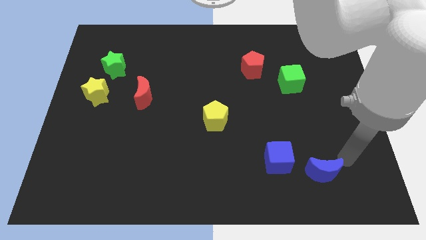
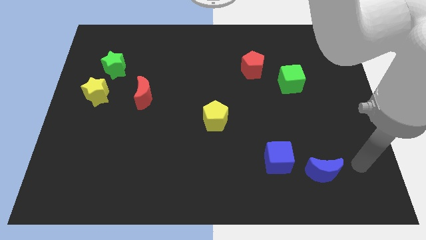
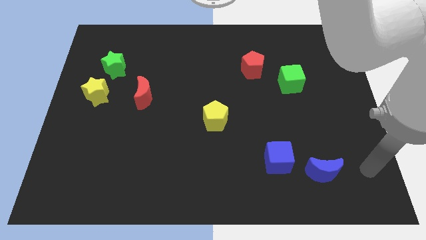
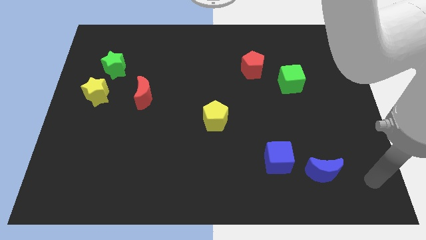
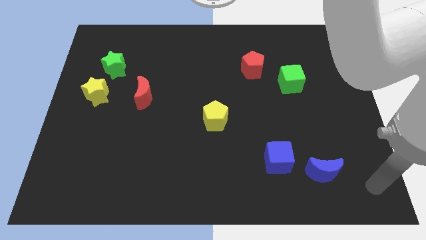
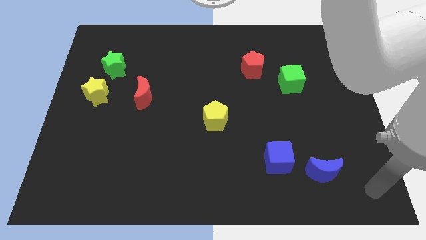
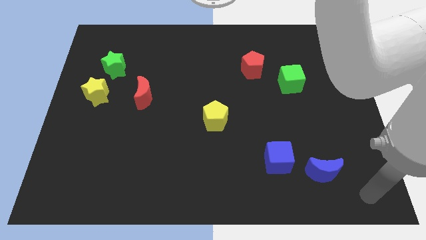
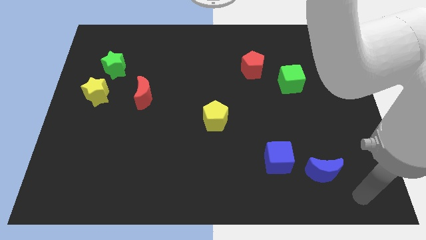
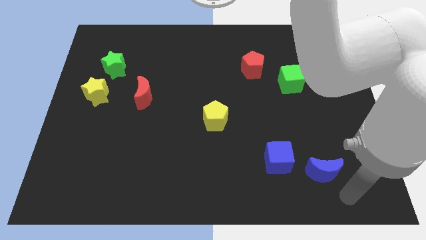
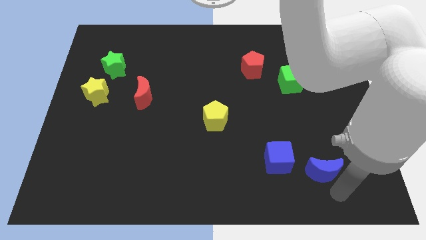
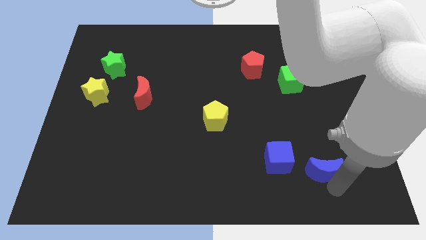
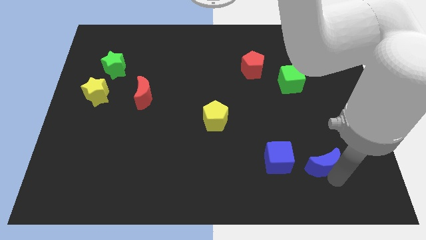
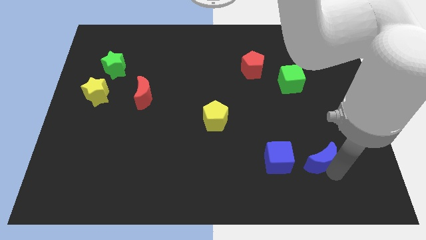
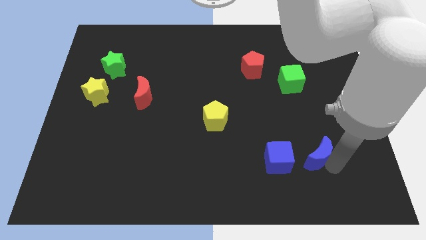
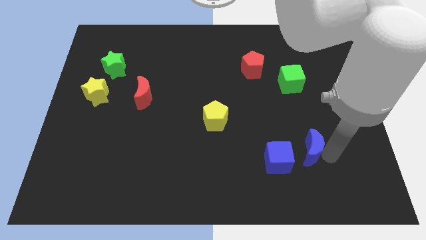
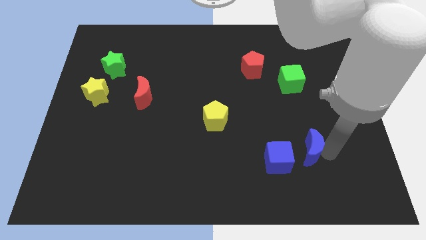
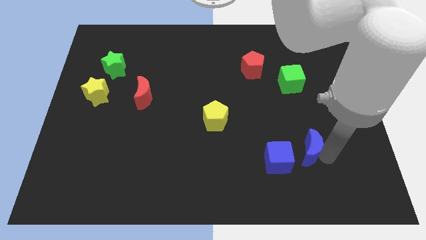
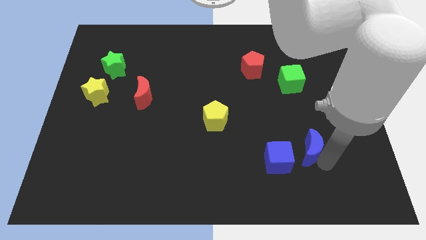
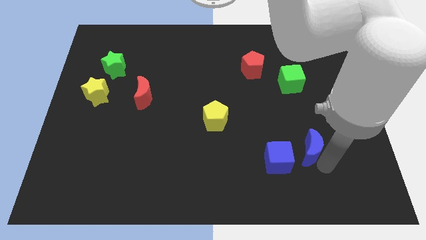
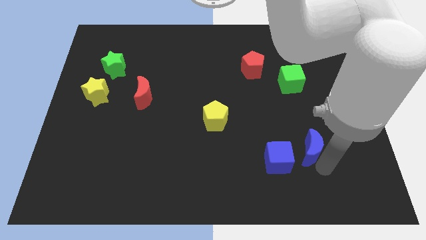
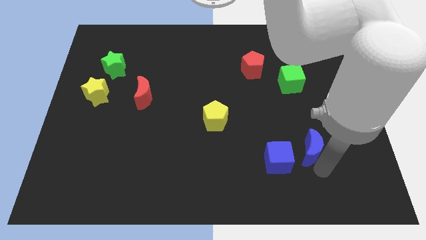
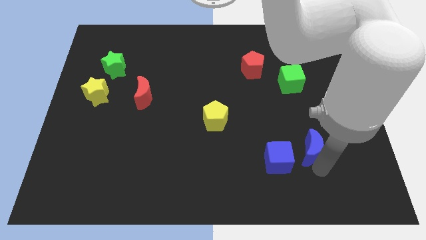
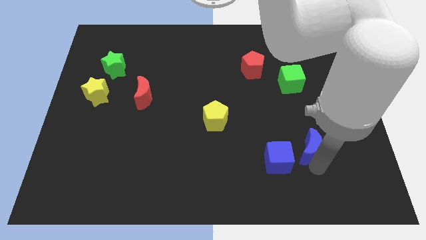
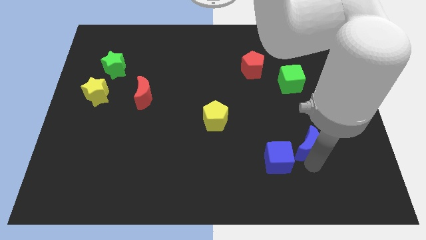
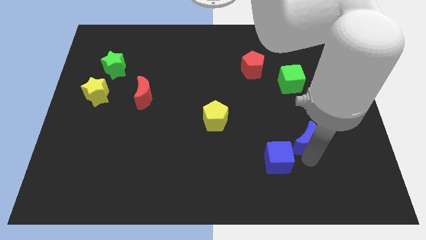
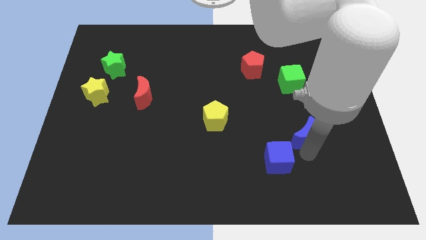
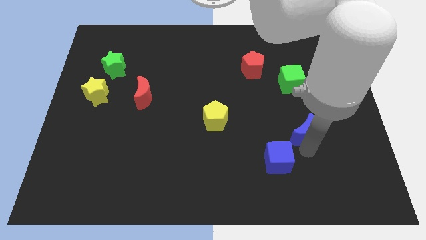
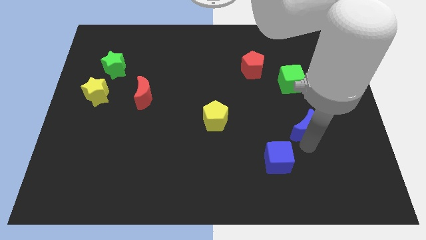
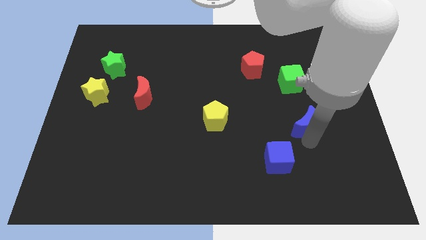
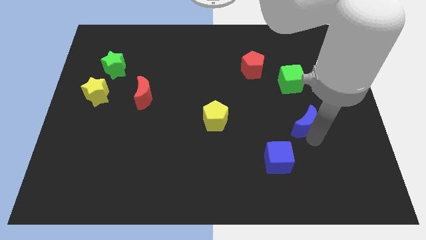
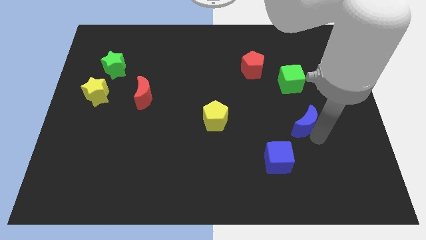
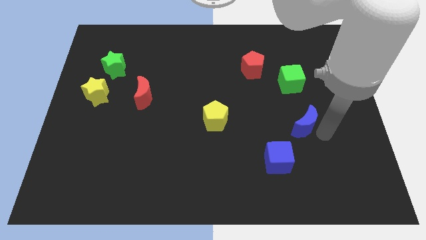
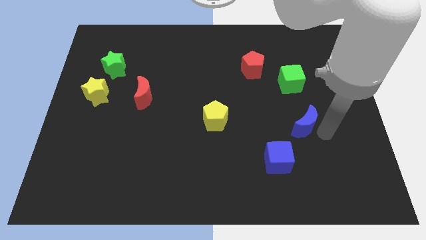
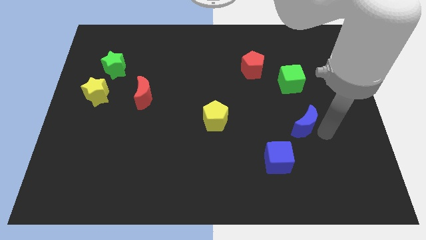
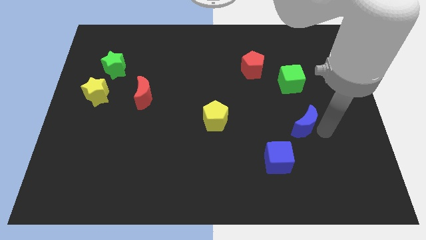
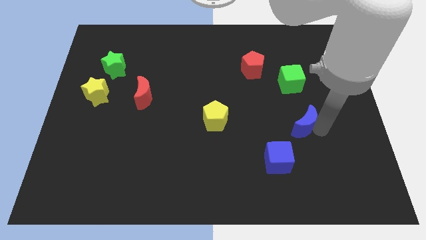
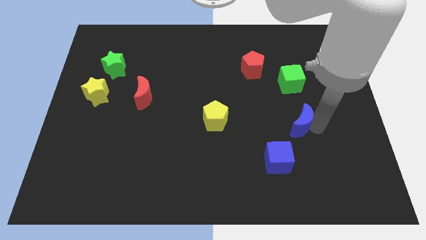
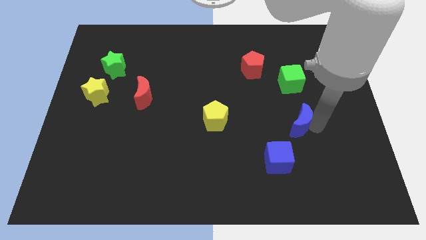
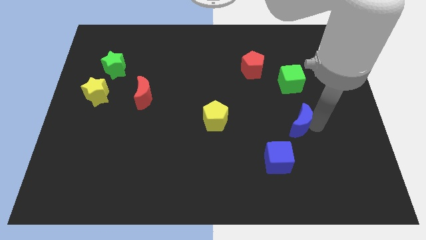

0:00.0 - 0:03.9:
move the blue crescent towards the green cube

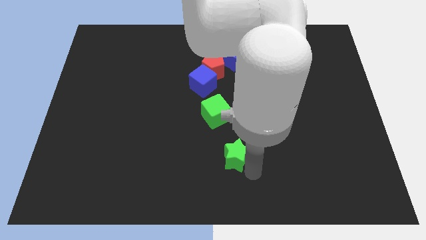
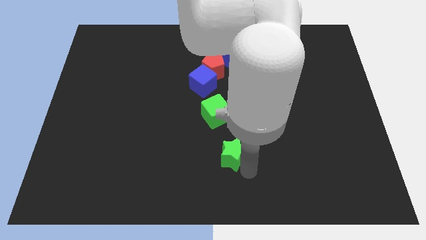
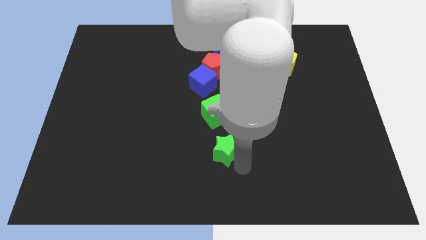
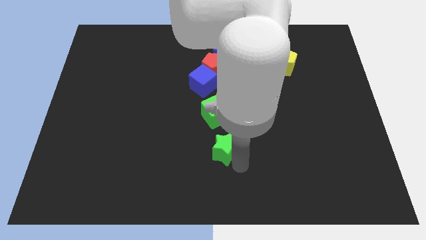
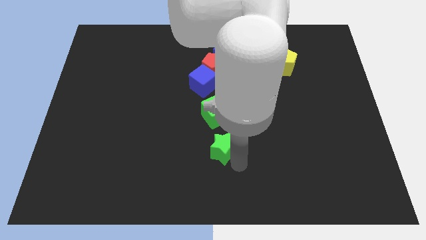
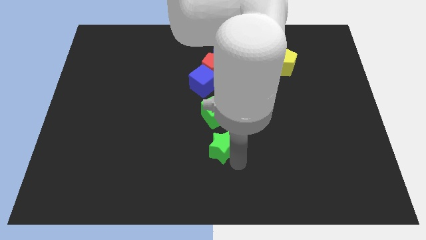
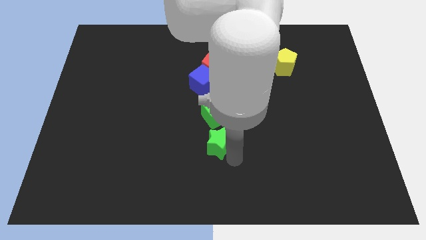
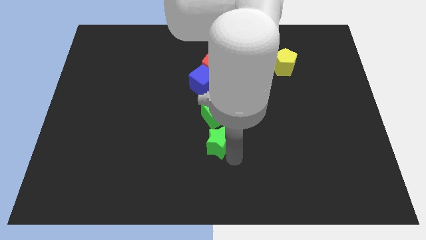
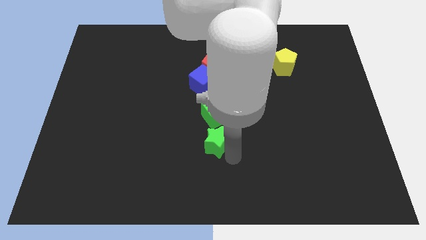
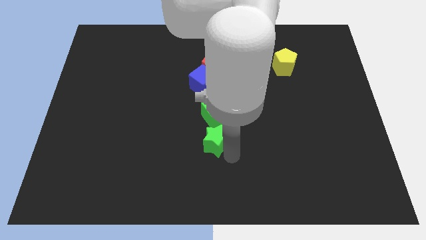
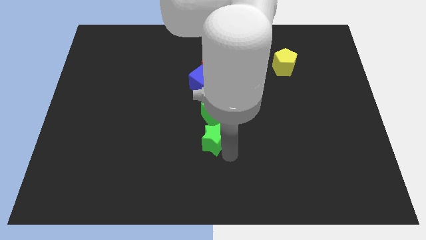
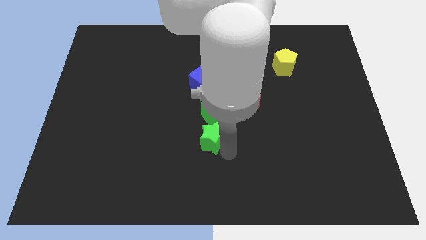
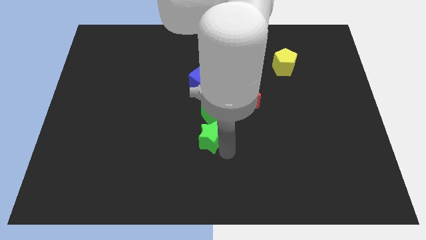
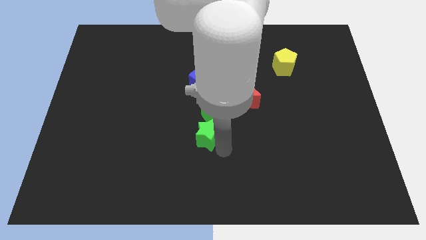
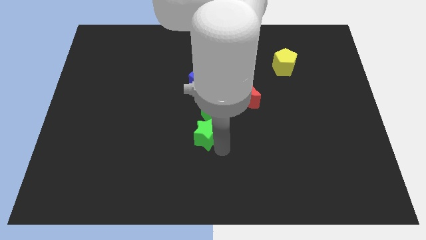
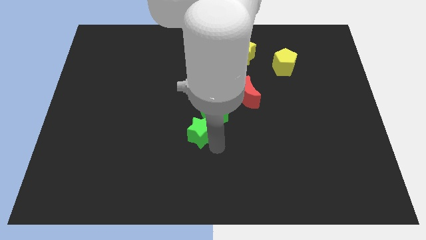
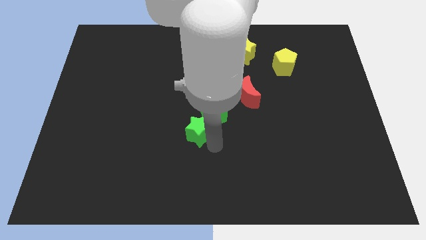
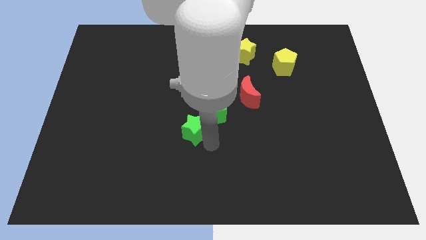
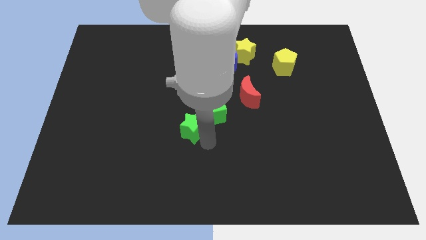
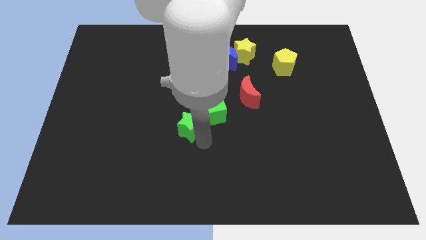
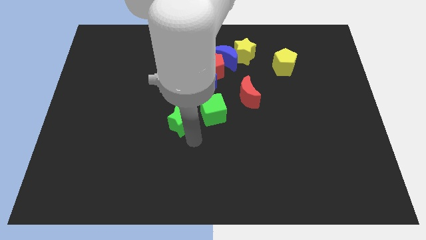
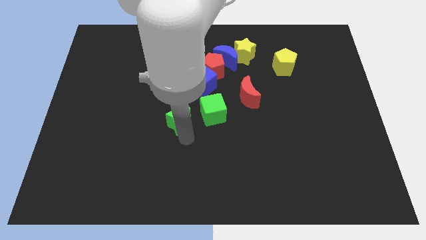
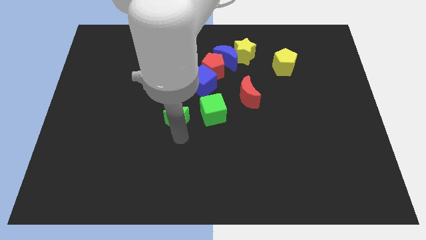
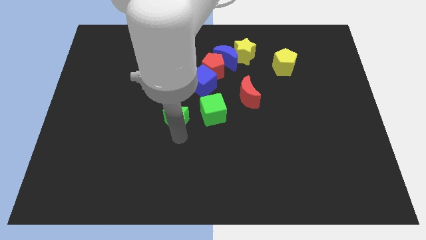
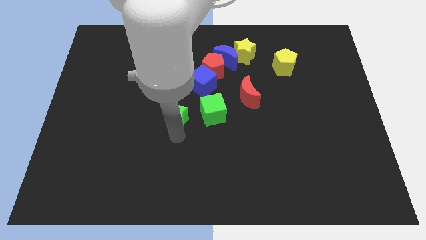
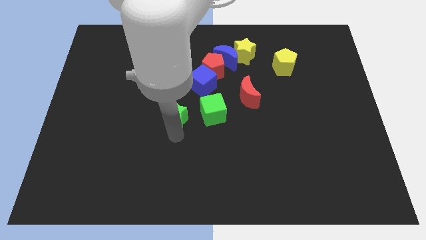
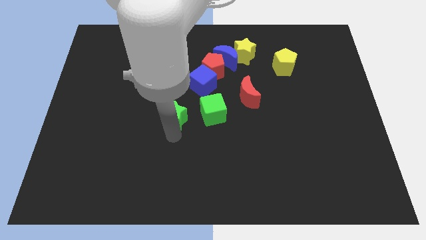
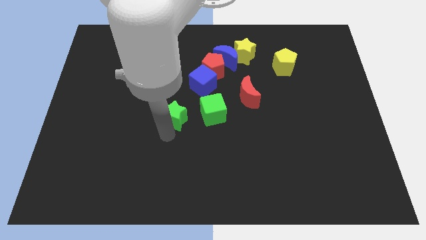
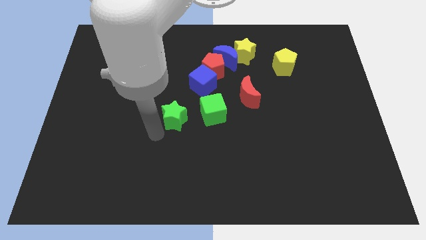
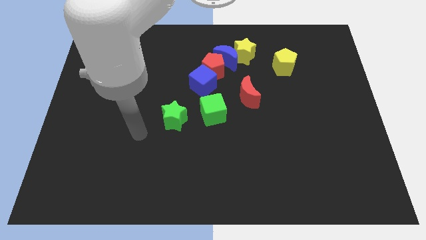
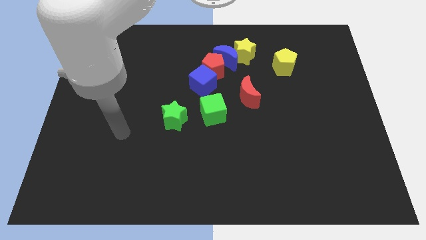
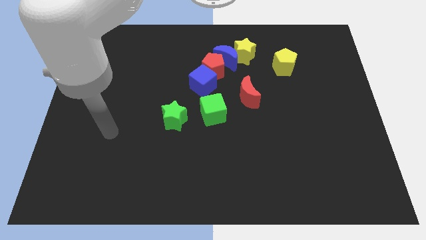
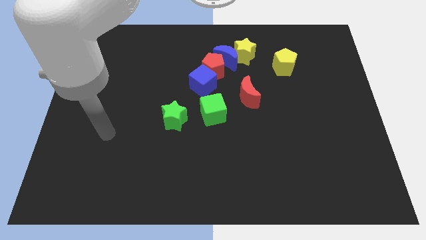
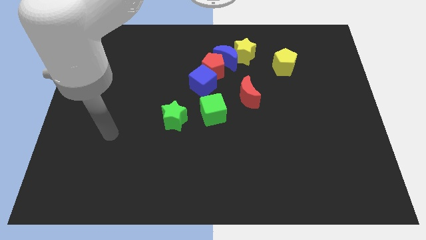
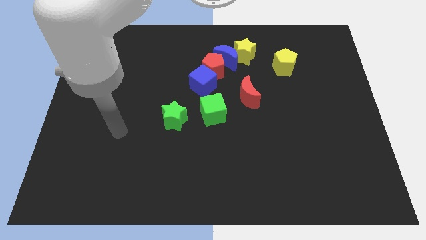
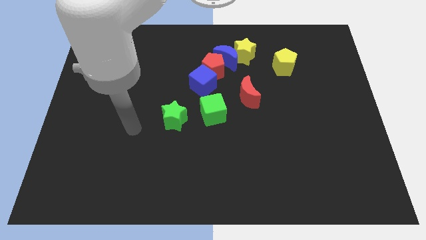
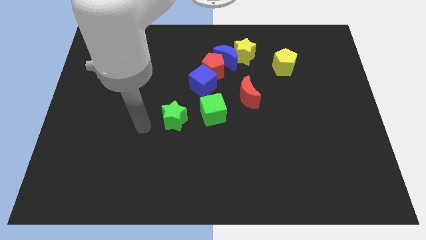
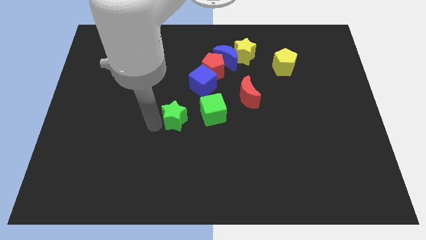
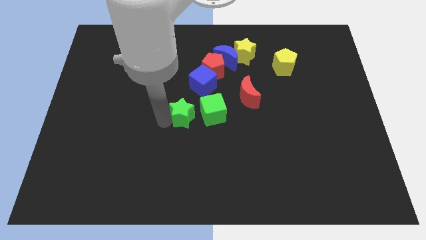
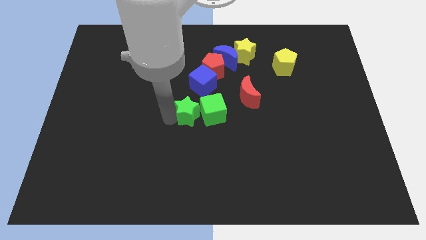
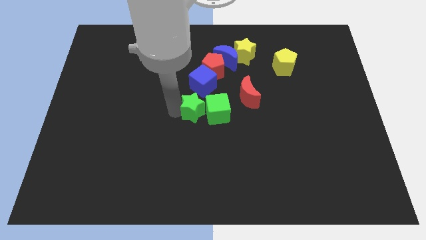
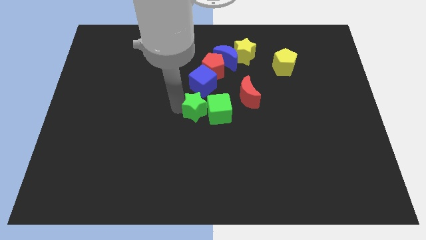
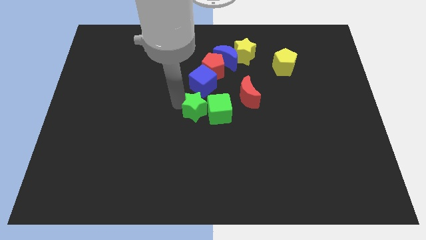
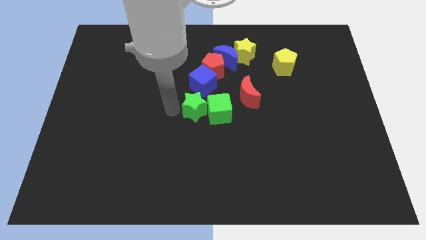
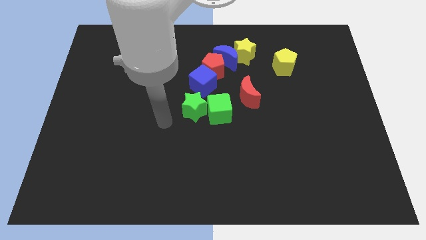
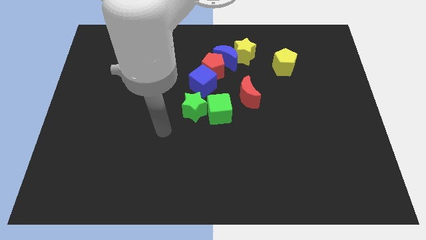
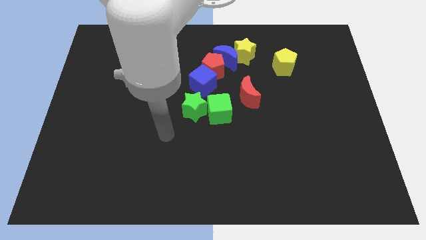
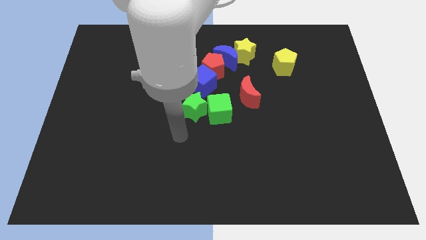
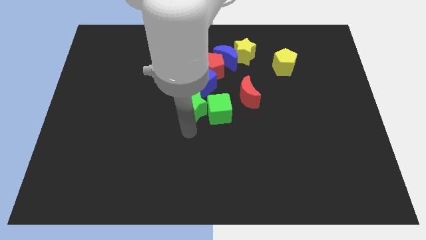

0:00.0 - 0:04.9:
move green star into the green cube

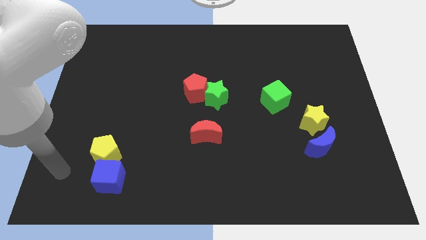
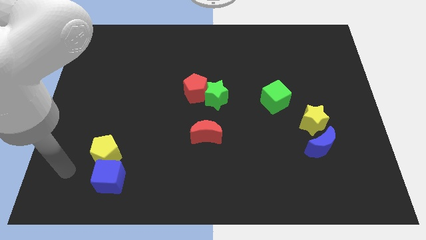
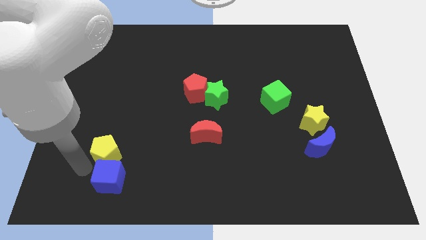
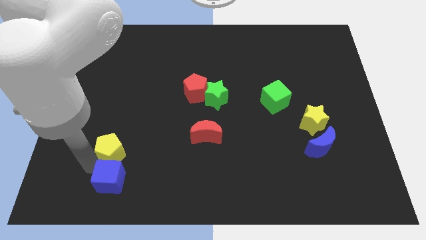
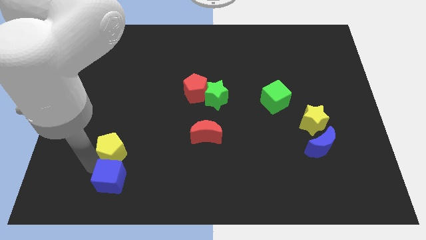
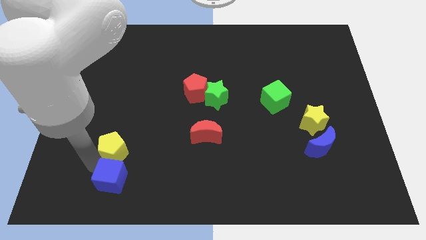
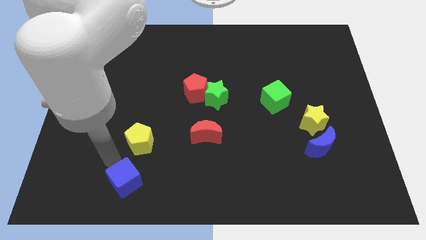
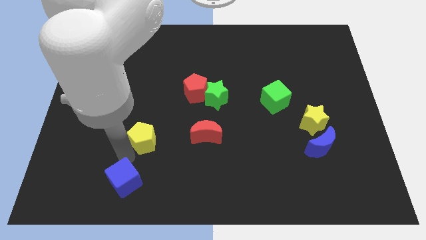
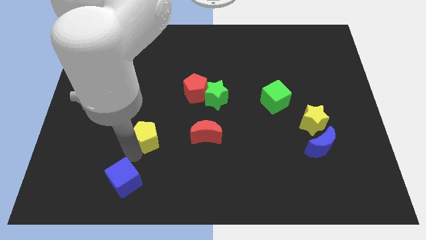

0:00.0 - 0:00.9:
place yellow pentagon parallel left to red moon
